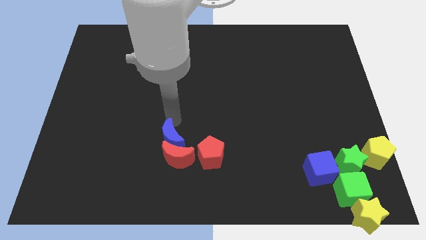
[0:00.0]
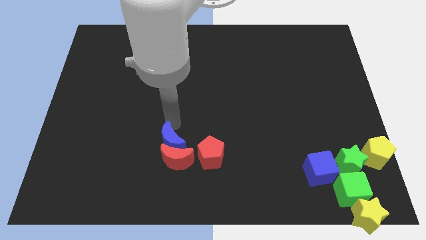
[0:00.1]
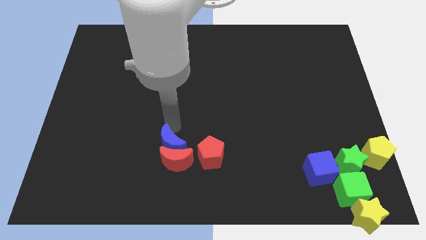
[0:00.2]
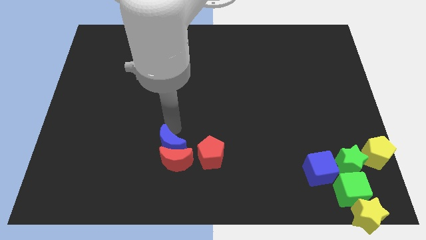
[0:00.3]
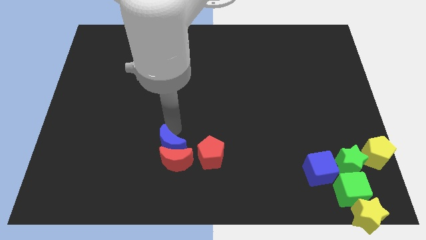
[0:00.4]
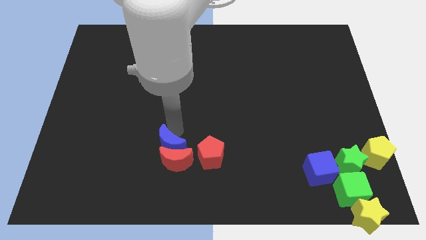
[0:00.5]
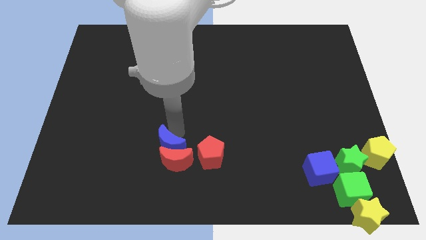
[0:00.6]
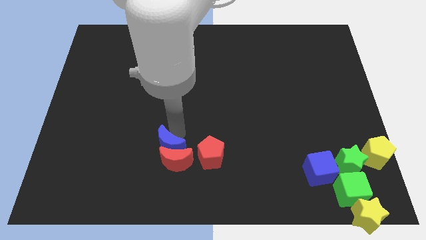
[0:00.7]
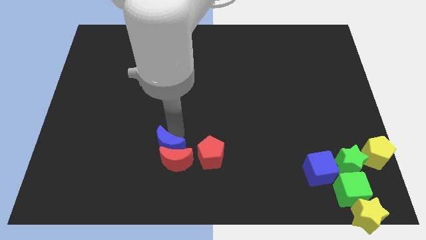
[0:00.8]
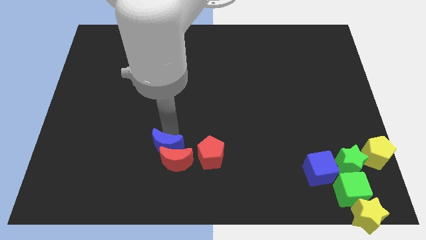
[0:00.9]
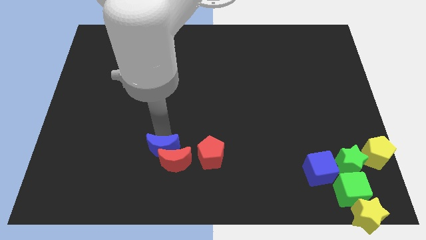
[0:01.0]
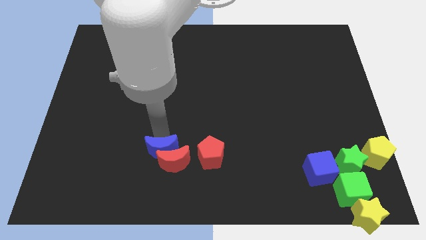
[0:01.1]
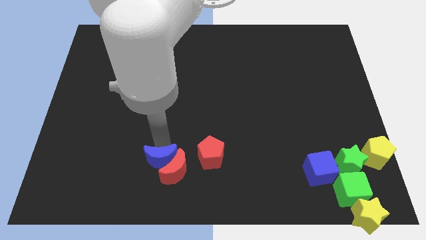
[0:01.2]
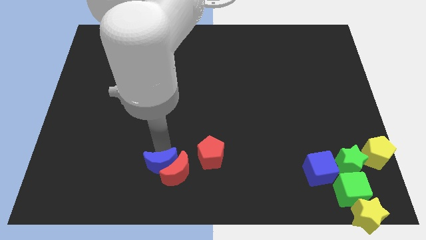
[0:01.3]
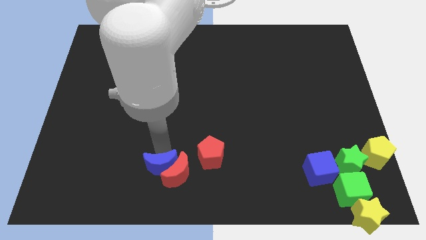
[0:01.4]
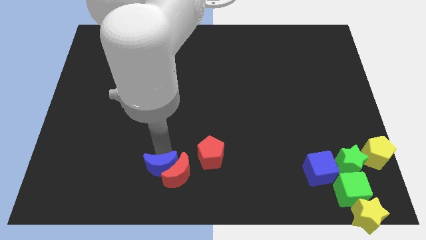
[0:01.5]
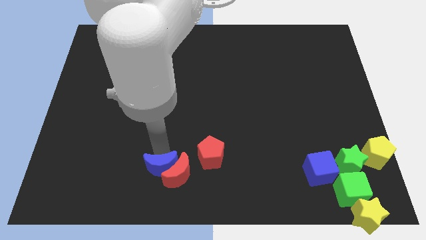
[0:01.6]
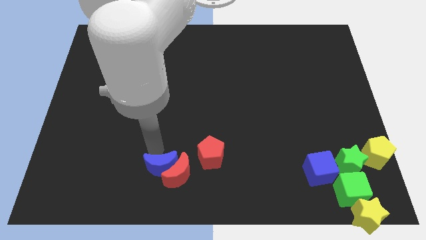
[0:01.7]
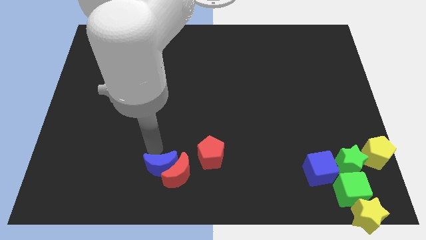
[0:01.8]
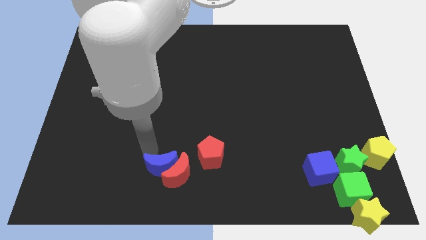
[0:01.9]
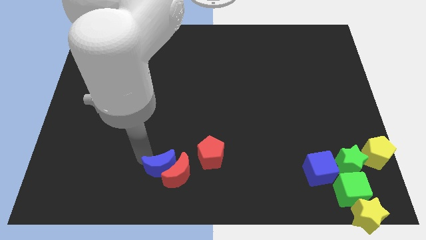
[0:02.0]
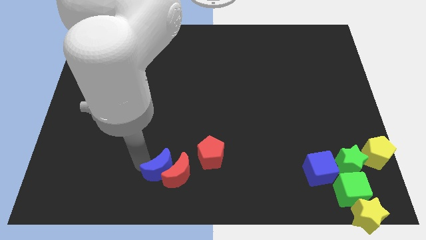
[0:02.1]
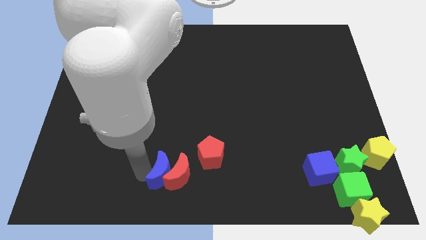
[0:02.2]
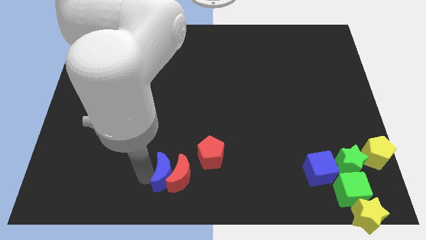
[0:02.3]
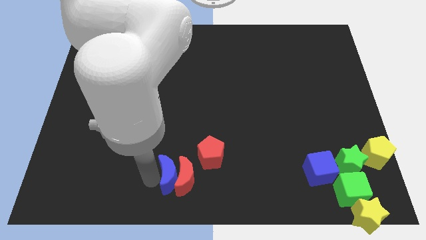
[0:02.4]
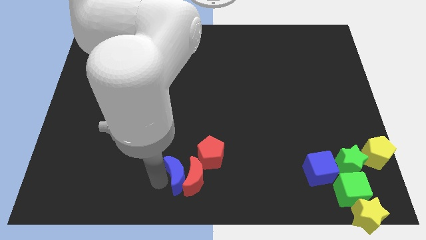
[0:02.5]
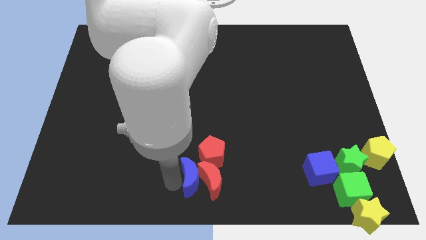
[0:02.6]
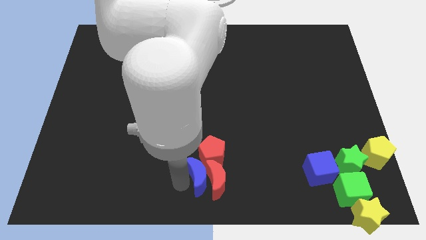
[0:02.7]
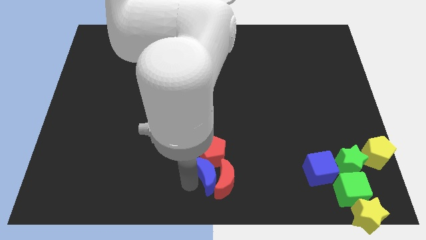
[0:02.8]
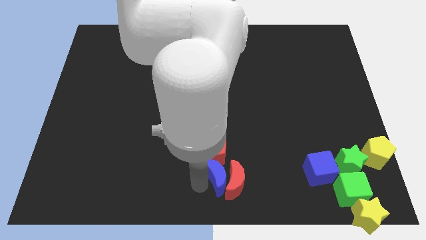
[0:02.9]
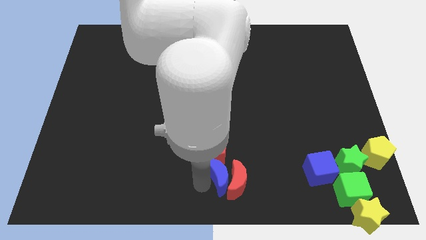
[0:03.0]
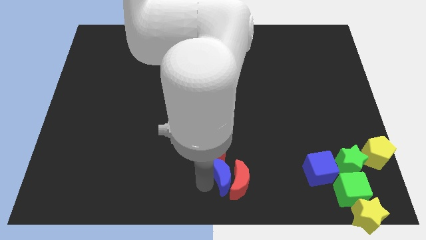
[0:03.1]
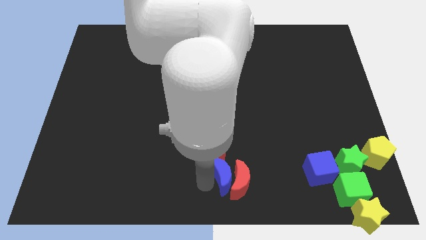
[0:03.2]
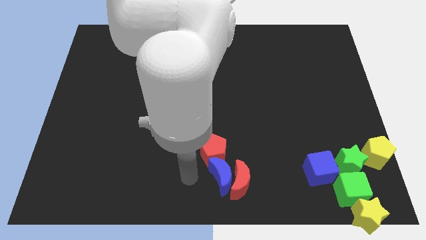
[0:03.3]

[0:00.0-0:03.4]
place the blue moon and red moon towards the bottom centre of the board

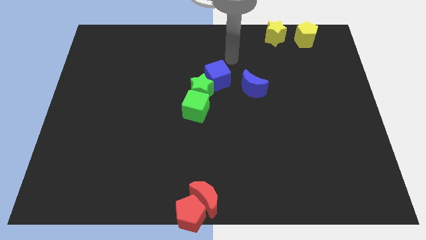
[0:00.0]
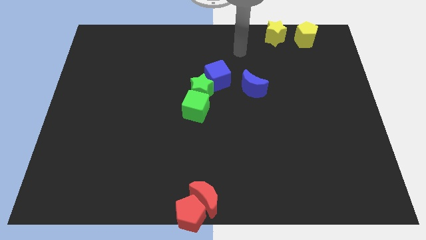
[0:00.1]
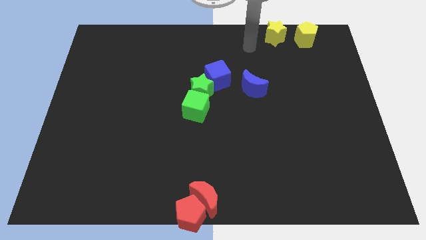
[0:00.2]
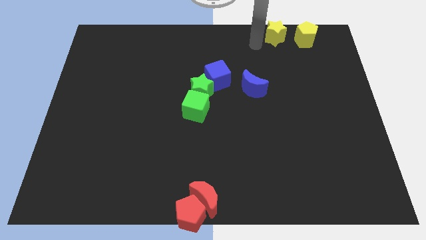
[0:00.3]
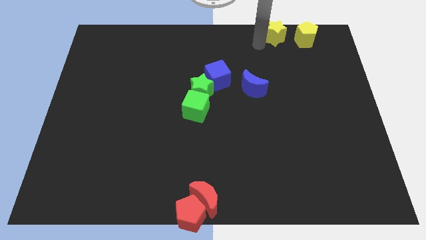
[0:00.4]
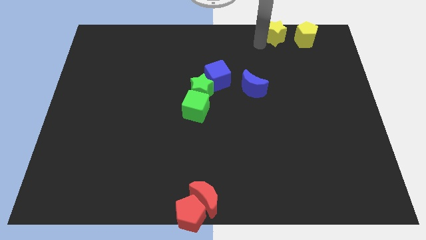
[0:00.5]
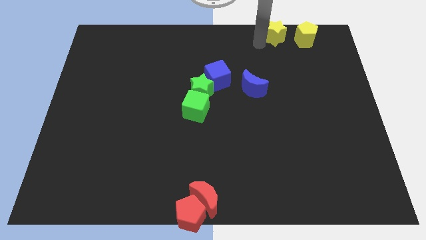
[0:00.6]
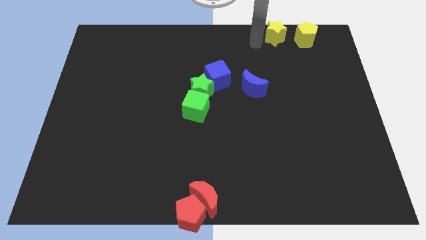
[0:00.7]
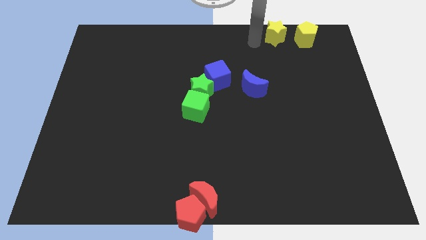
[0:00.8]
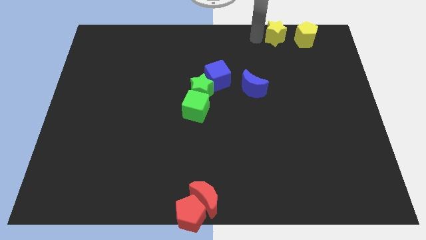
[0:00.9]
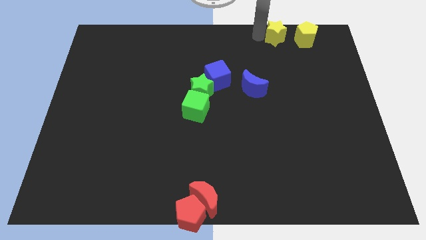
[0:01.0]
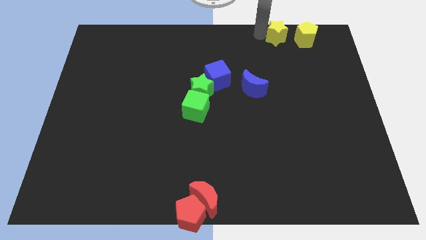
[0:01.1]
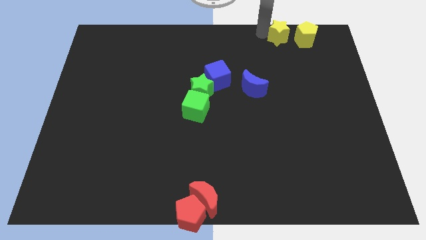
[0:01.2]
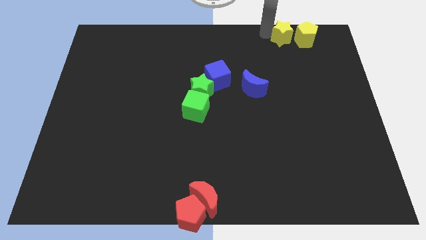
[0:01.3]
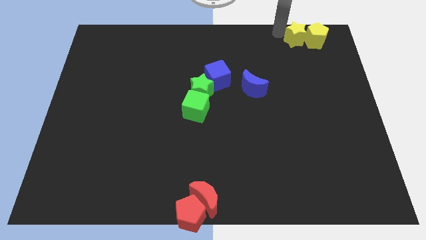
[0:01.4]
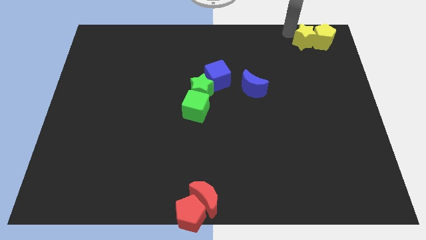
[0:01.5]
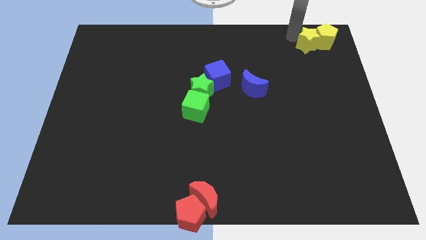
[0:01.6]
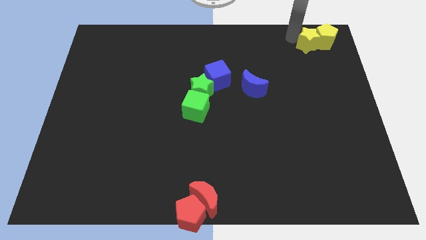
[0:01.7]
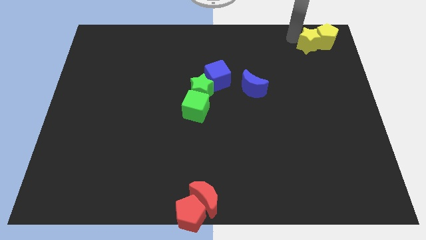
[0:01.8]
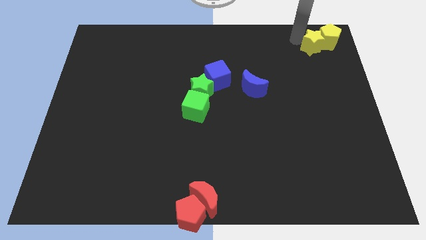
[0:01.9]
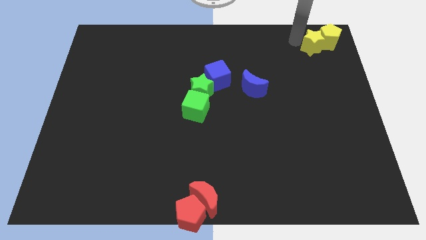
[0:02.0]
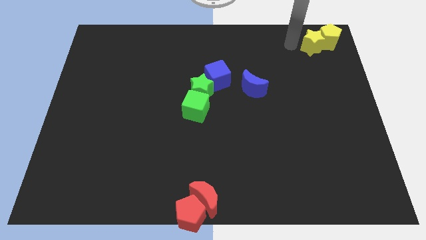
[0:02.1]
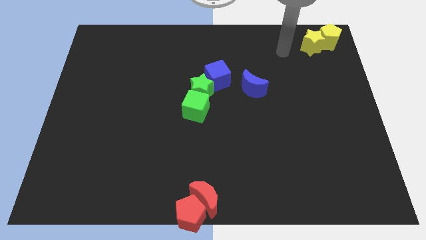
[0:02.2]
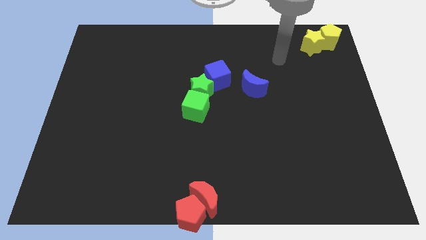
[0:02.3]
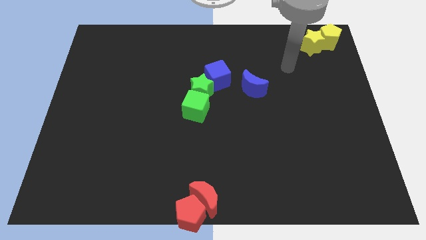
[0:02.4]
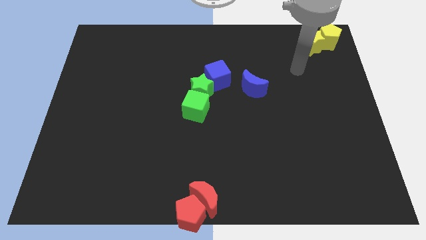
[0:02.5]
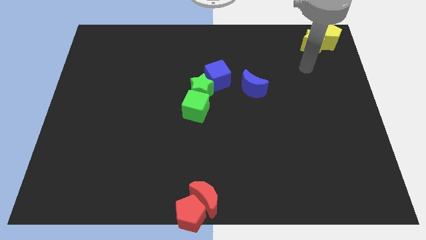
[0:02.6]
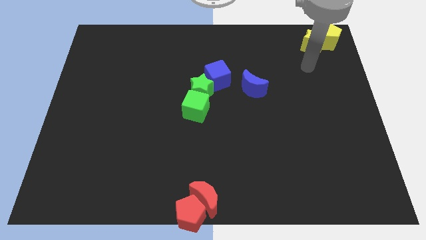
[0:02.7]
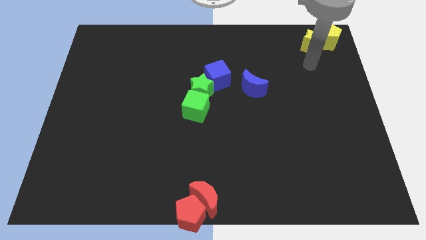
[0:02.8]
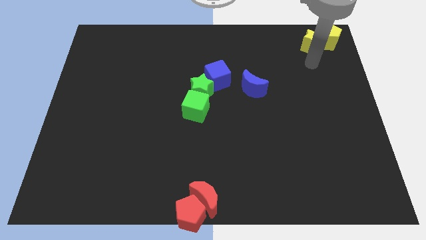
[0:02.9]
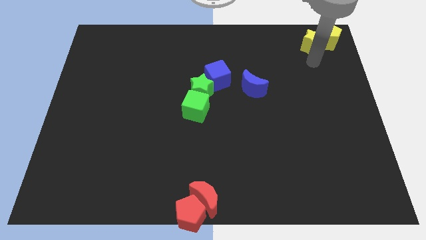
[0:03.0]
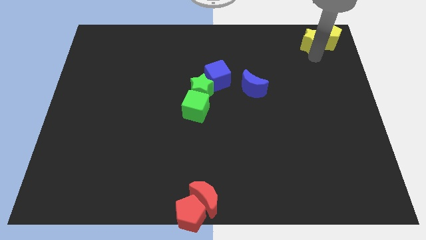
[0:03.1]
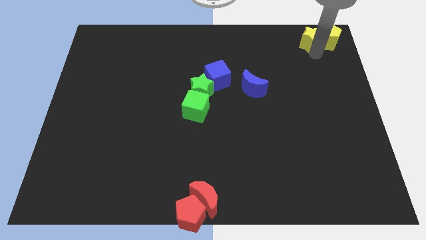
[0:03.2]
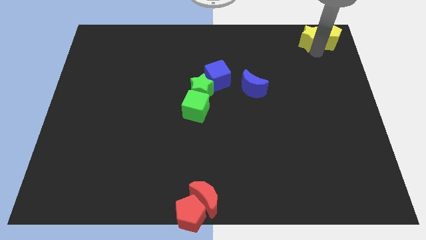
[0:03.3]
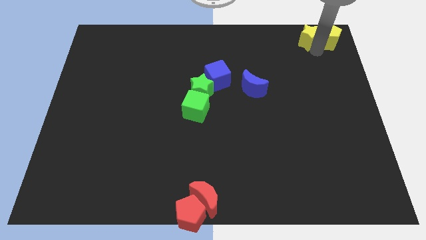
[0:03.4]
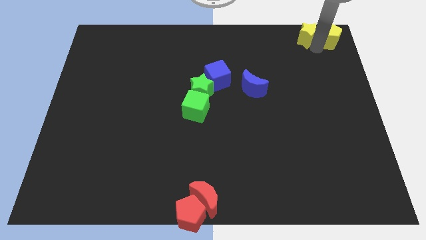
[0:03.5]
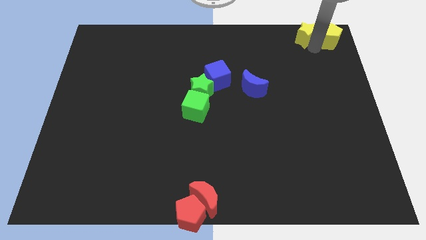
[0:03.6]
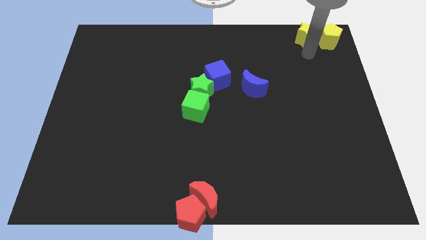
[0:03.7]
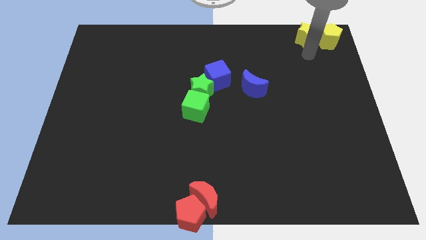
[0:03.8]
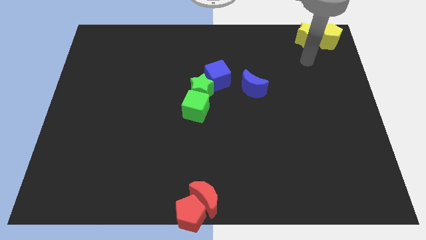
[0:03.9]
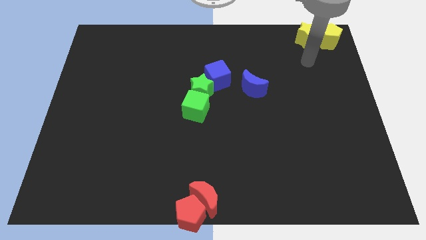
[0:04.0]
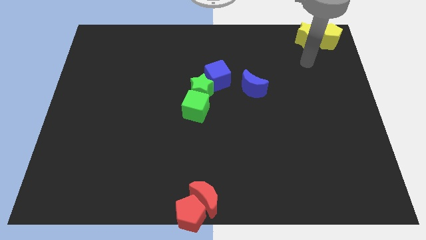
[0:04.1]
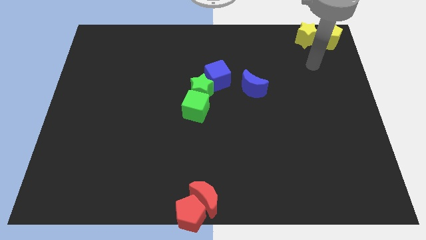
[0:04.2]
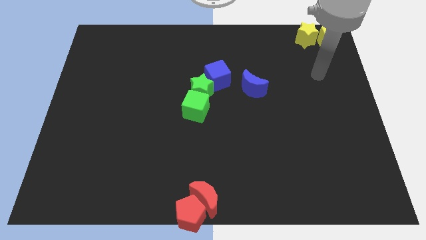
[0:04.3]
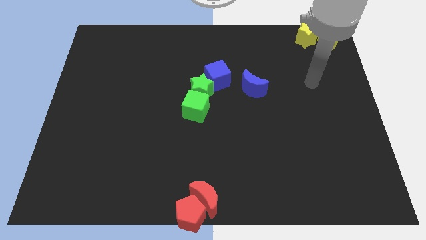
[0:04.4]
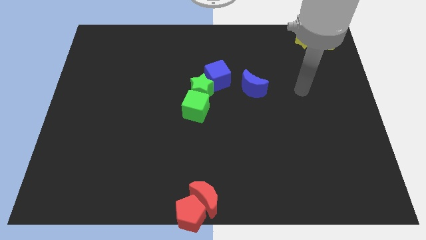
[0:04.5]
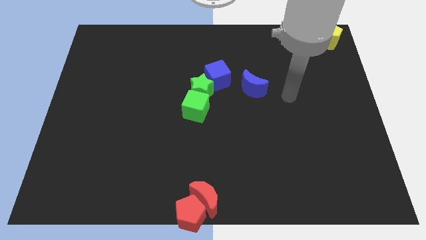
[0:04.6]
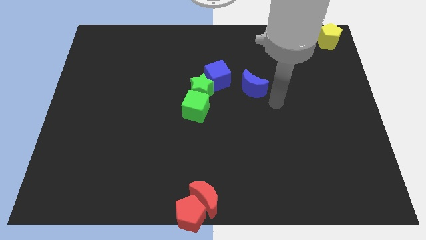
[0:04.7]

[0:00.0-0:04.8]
move the yellow blocks to the top right corner

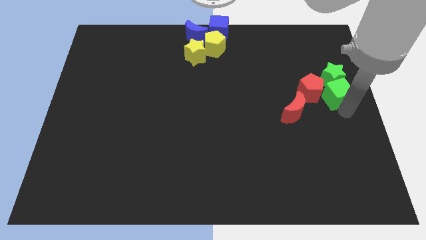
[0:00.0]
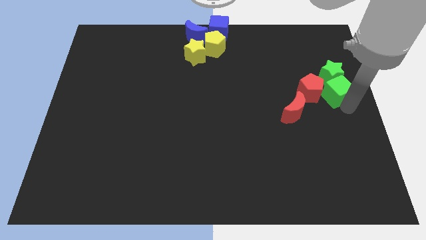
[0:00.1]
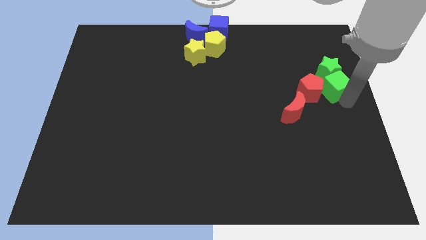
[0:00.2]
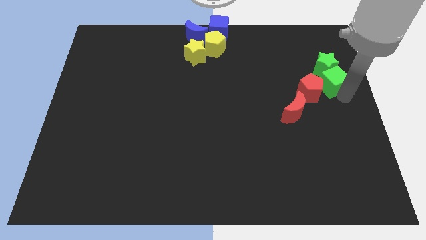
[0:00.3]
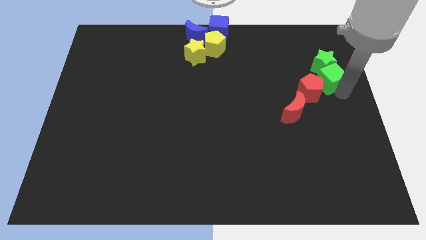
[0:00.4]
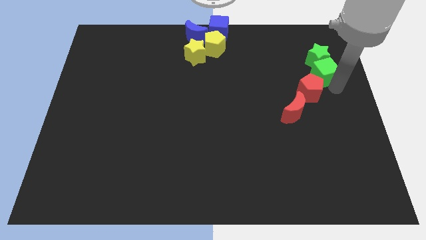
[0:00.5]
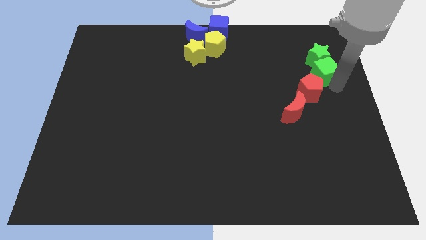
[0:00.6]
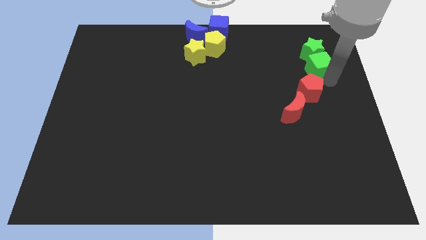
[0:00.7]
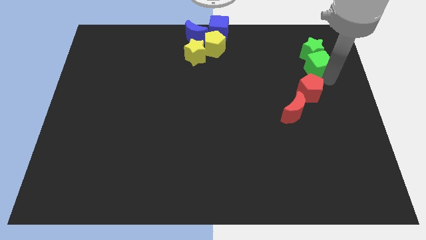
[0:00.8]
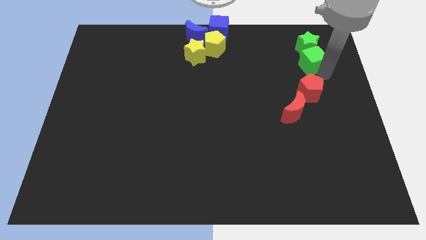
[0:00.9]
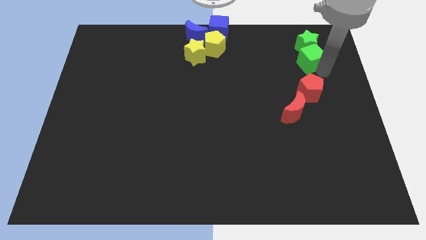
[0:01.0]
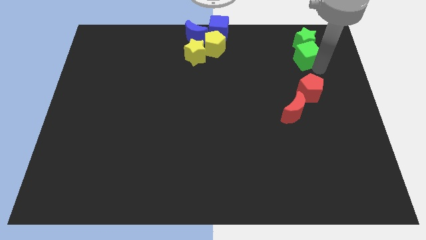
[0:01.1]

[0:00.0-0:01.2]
push green star and green cube together to the top side of the red pentagon
